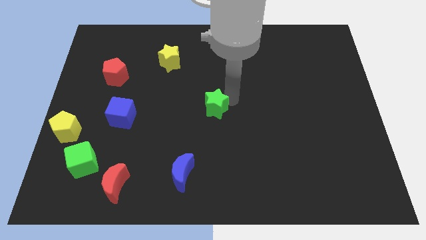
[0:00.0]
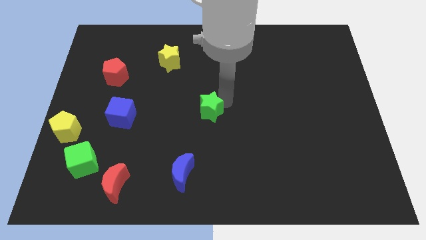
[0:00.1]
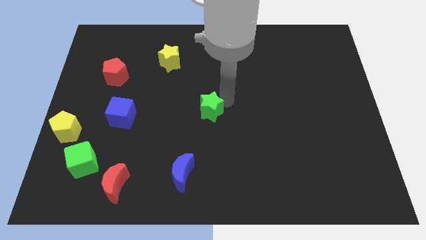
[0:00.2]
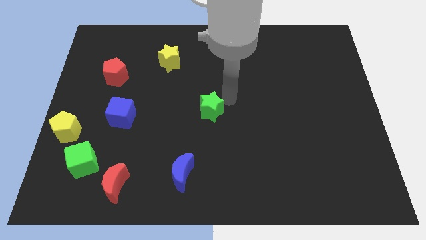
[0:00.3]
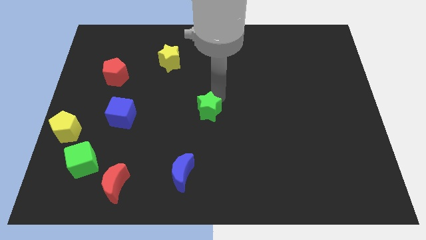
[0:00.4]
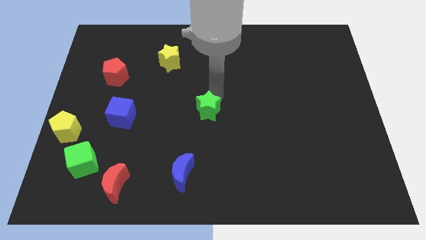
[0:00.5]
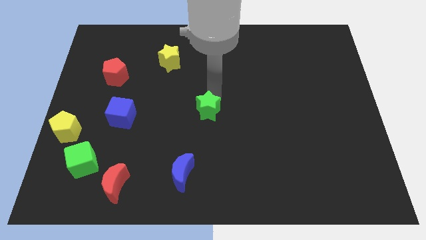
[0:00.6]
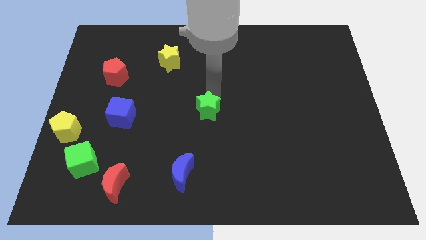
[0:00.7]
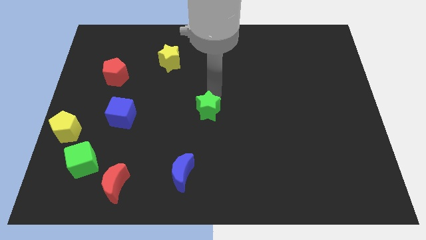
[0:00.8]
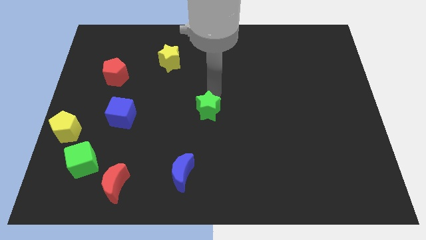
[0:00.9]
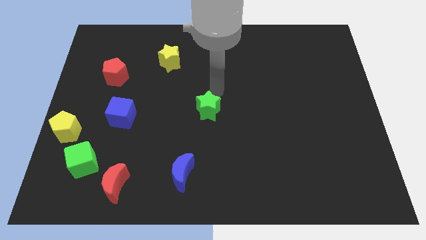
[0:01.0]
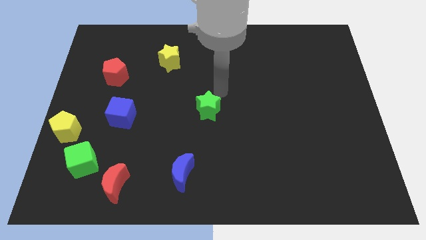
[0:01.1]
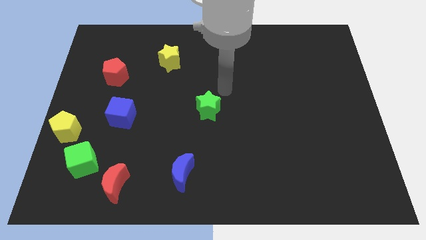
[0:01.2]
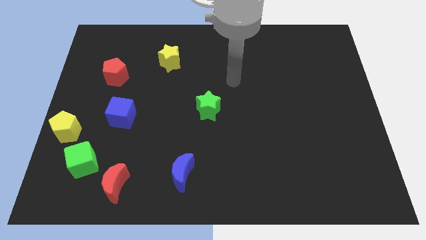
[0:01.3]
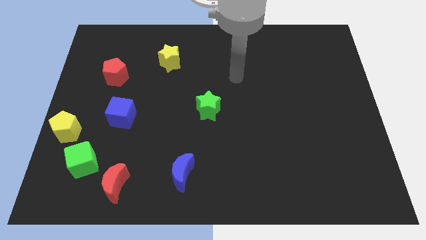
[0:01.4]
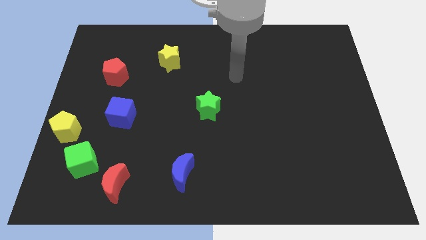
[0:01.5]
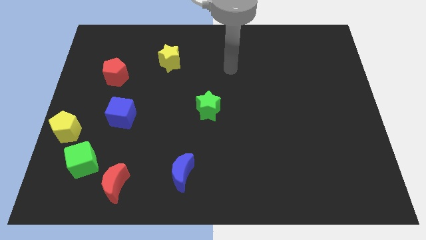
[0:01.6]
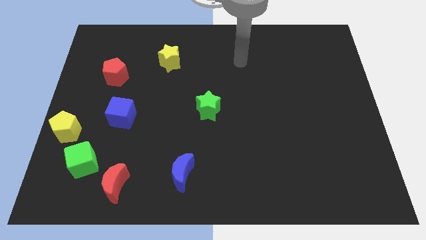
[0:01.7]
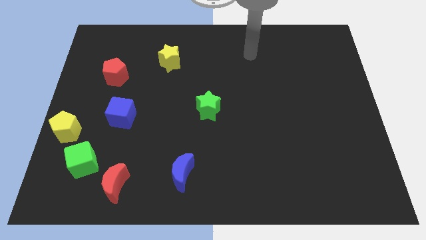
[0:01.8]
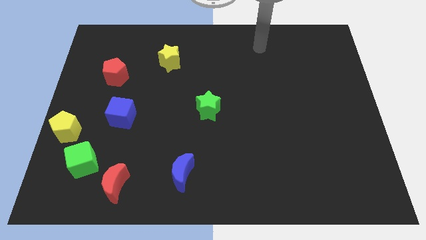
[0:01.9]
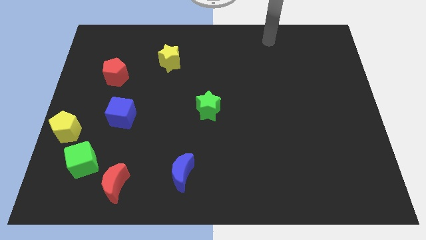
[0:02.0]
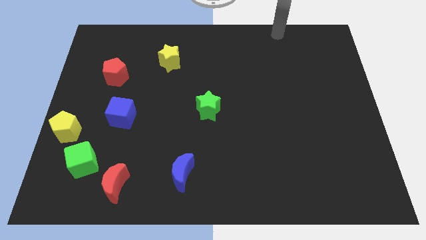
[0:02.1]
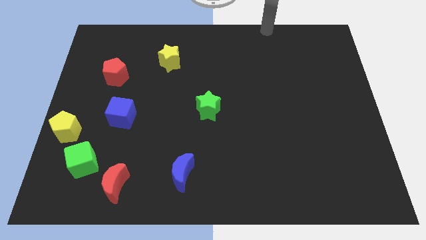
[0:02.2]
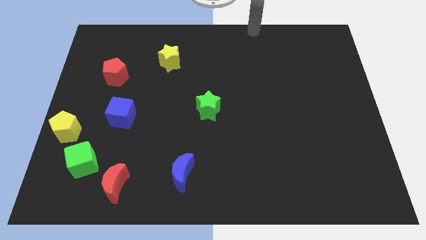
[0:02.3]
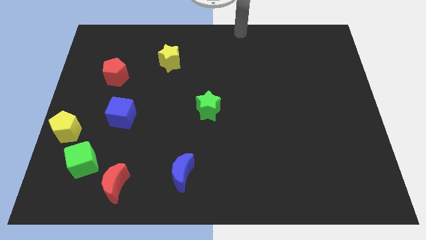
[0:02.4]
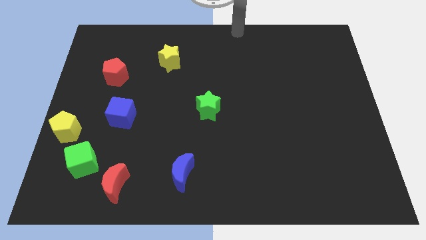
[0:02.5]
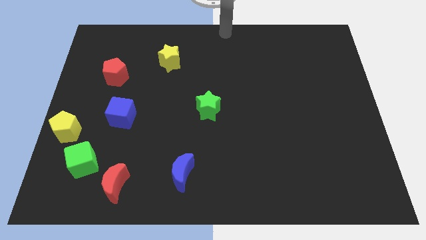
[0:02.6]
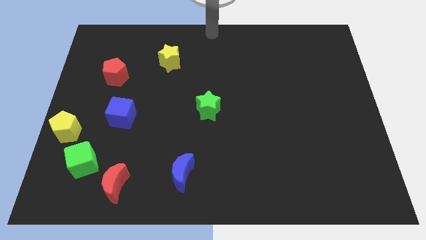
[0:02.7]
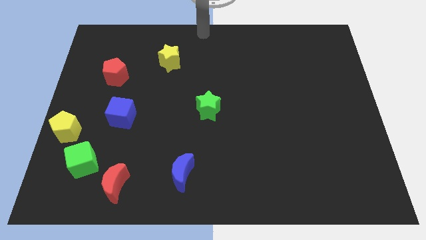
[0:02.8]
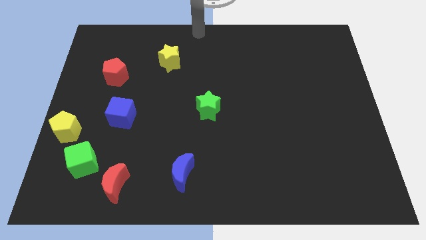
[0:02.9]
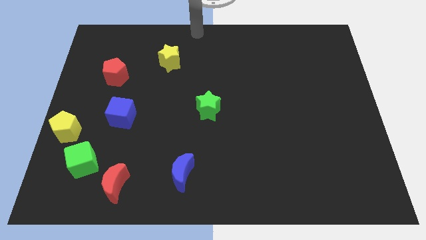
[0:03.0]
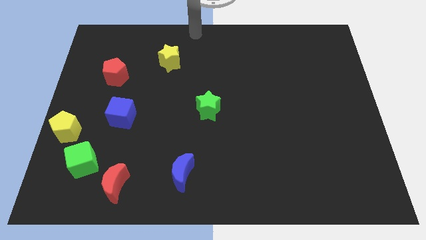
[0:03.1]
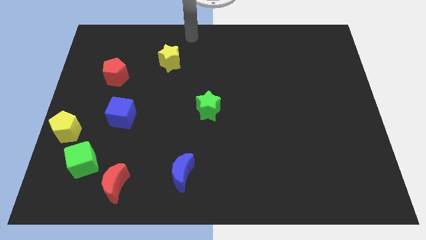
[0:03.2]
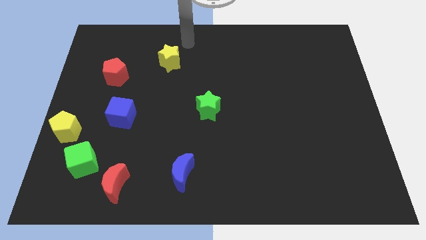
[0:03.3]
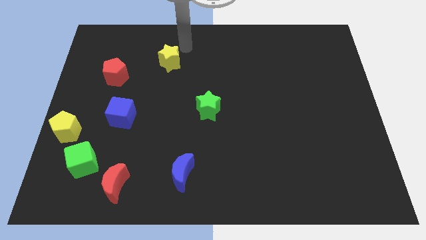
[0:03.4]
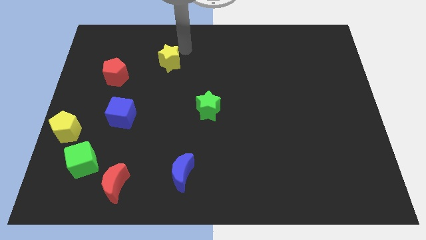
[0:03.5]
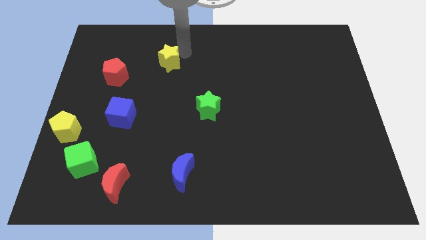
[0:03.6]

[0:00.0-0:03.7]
place the arm diagonally to the yellow star

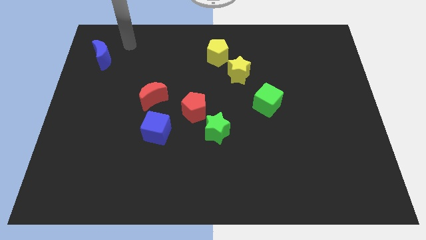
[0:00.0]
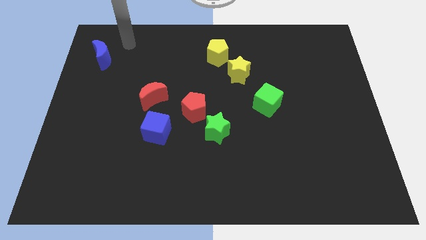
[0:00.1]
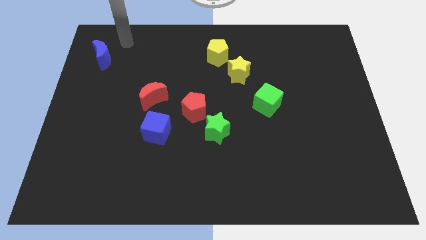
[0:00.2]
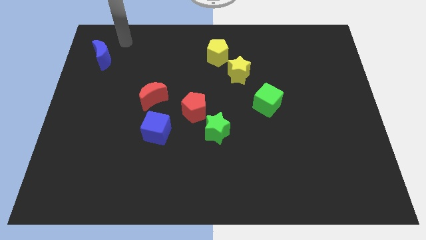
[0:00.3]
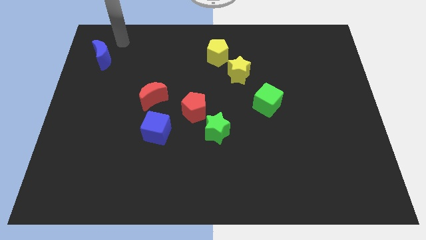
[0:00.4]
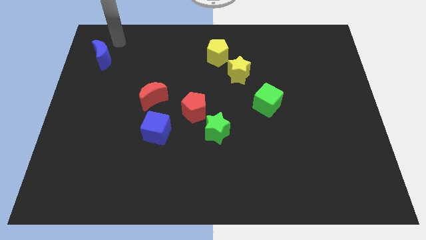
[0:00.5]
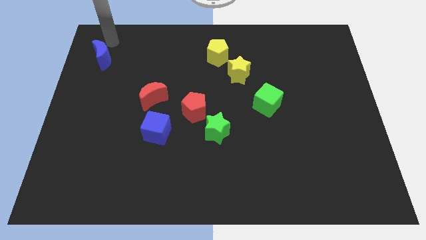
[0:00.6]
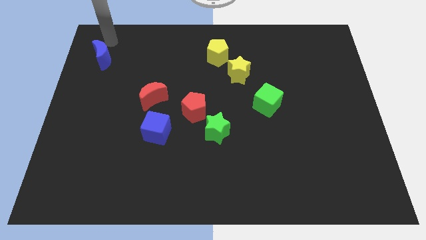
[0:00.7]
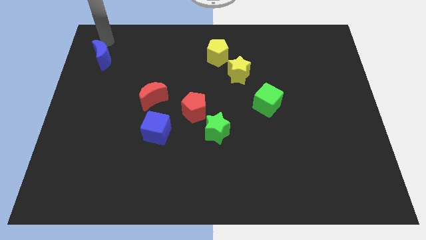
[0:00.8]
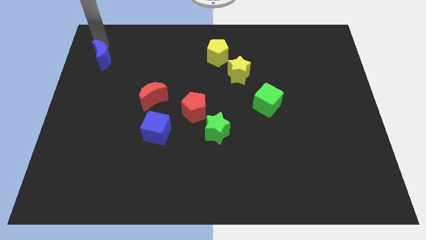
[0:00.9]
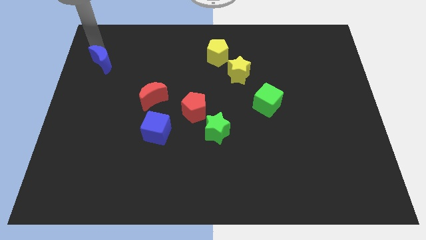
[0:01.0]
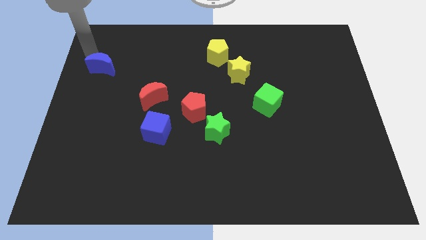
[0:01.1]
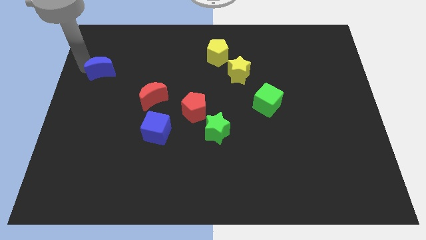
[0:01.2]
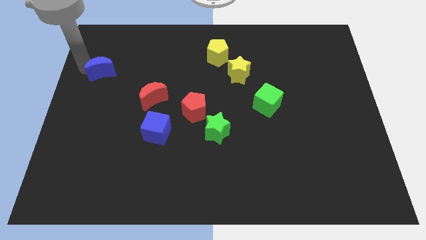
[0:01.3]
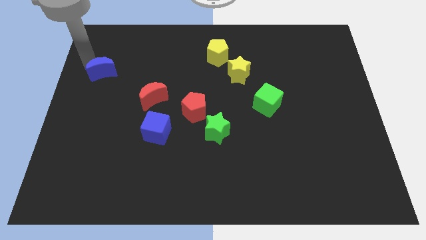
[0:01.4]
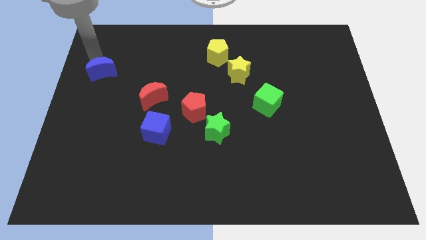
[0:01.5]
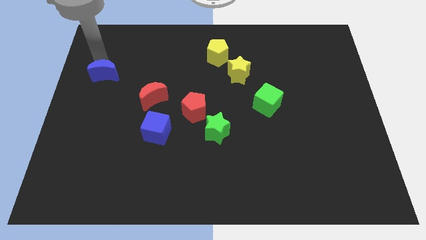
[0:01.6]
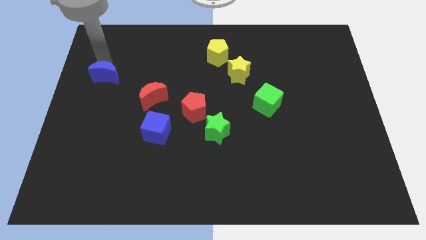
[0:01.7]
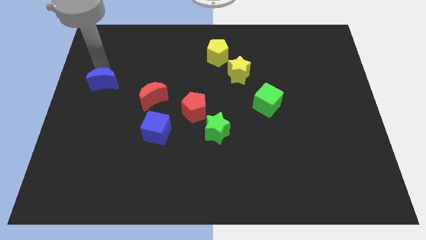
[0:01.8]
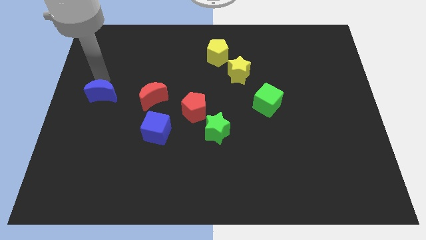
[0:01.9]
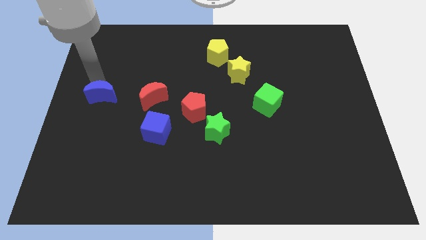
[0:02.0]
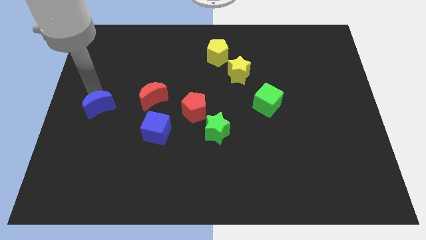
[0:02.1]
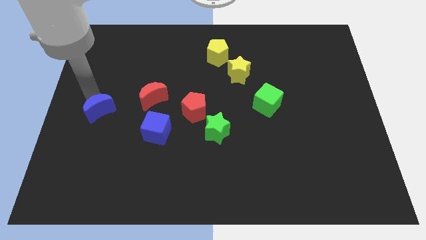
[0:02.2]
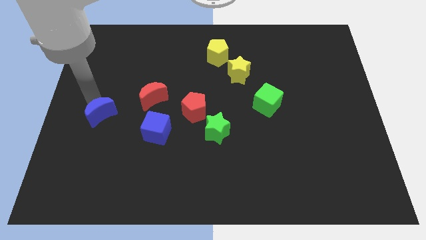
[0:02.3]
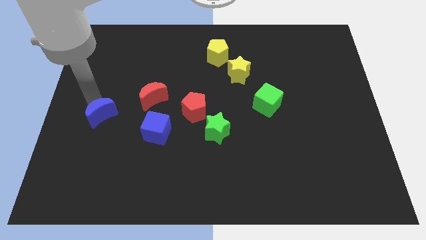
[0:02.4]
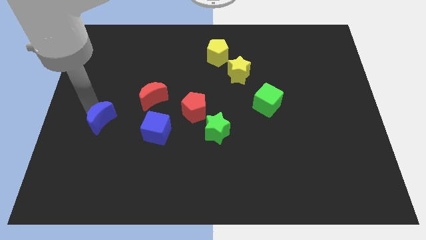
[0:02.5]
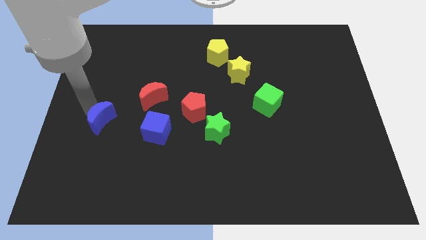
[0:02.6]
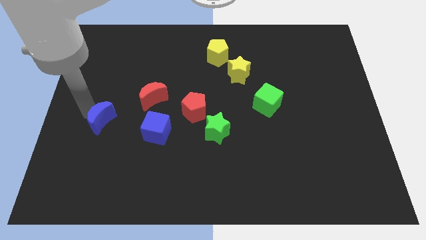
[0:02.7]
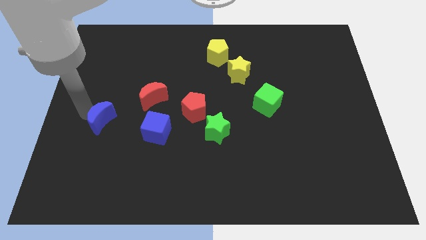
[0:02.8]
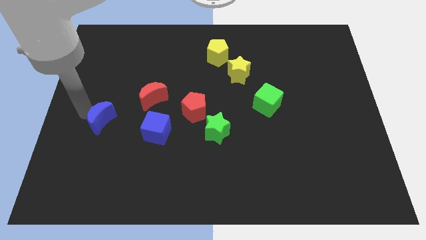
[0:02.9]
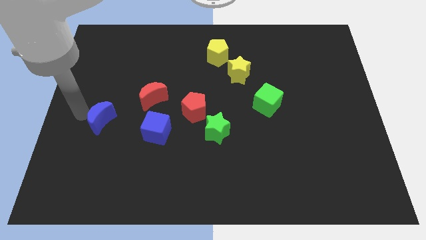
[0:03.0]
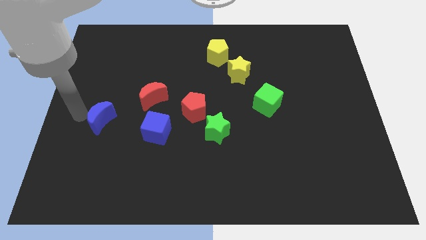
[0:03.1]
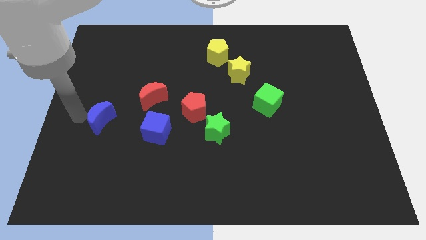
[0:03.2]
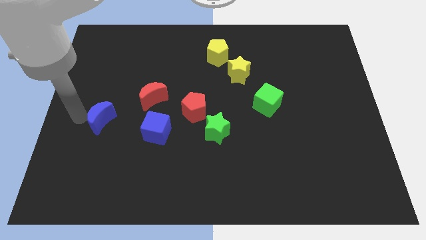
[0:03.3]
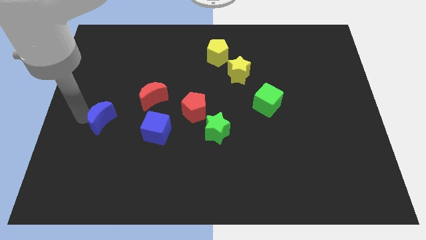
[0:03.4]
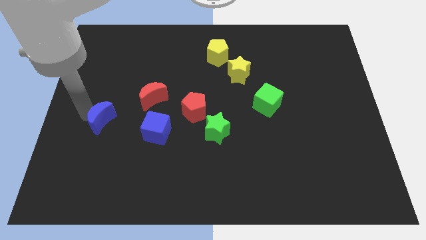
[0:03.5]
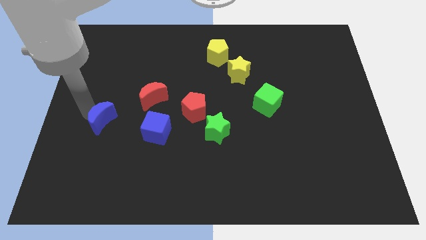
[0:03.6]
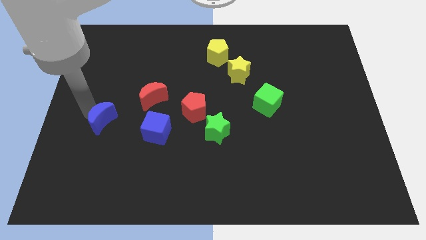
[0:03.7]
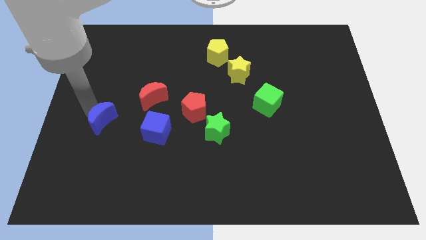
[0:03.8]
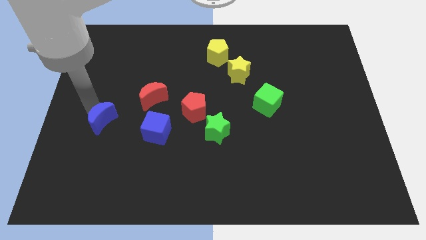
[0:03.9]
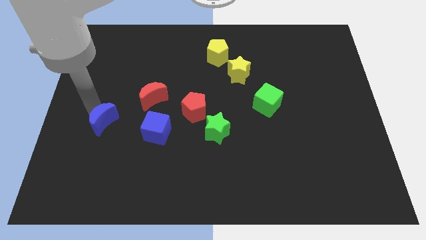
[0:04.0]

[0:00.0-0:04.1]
place blue moon to the left of blue cube

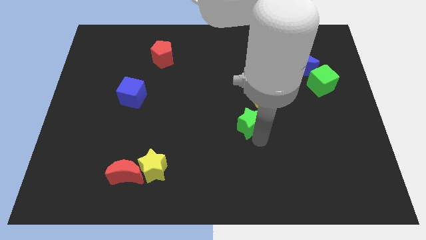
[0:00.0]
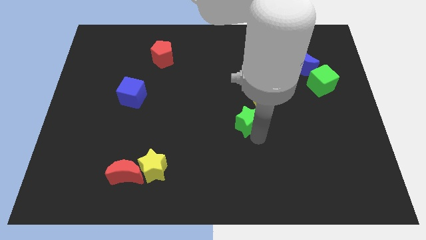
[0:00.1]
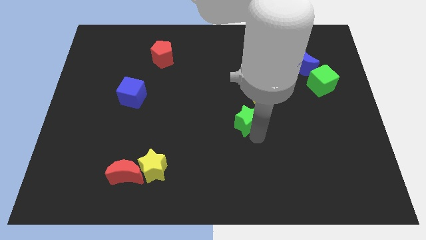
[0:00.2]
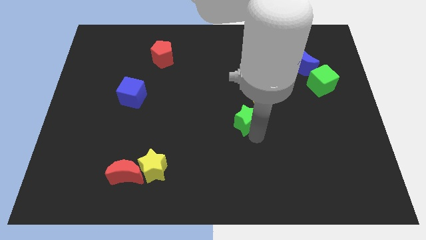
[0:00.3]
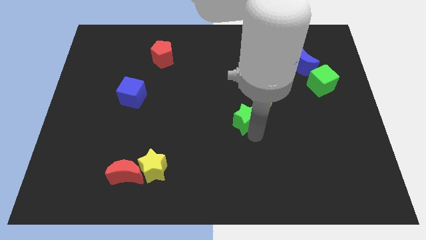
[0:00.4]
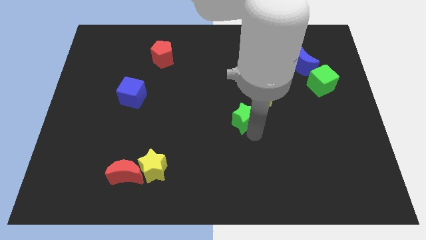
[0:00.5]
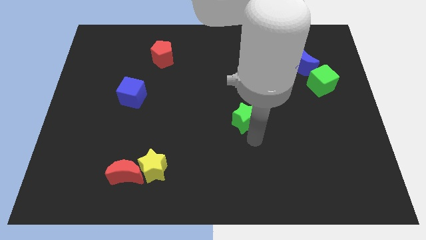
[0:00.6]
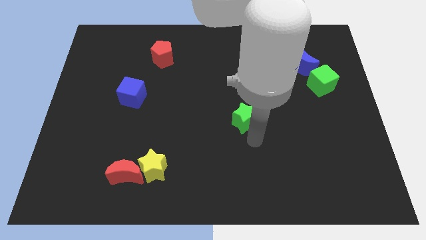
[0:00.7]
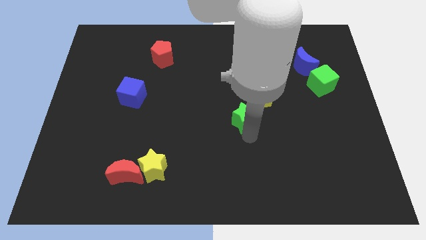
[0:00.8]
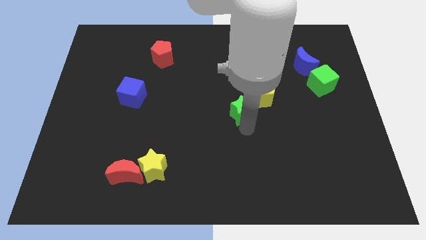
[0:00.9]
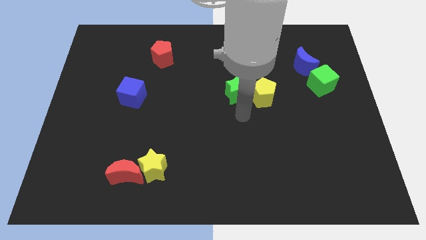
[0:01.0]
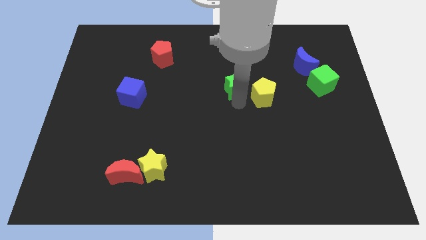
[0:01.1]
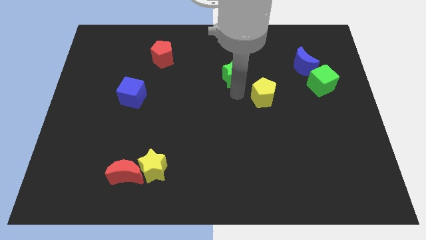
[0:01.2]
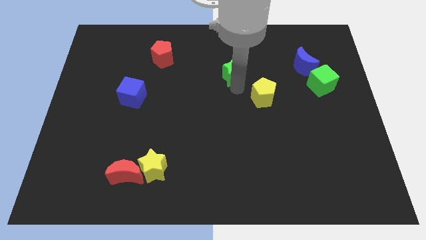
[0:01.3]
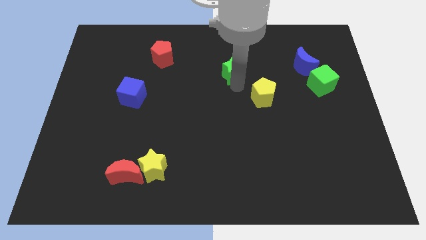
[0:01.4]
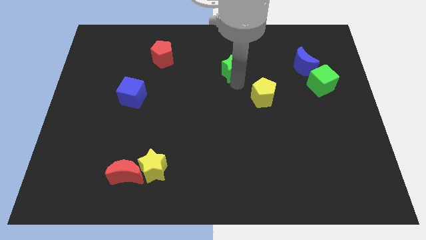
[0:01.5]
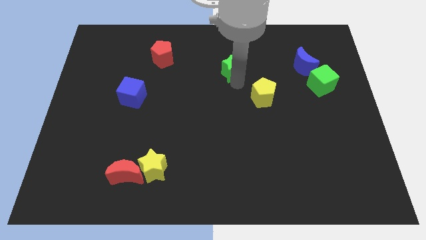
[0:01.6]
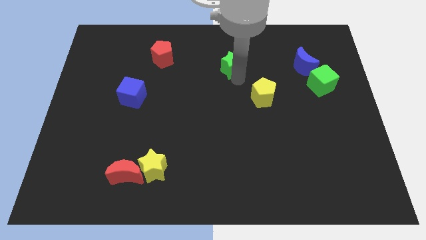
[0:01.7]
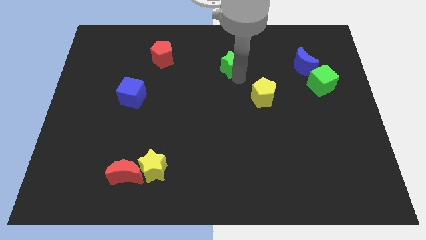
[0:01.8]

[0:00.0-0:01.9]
drag the green star to the top of the board
